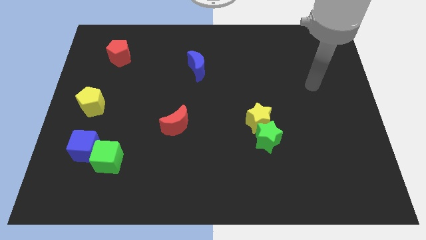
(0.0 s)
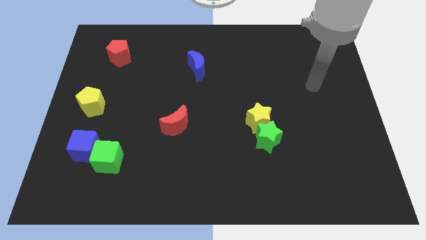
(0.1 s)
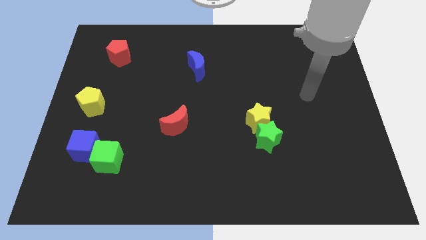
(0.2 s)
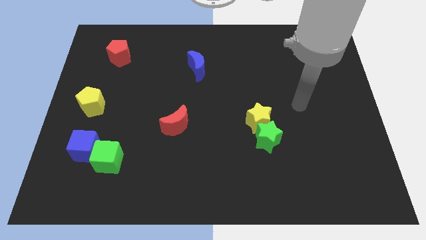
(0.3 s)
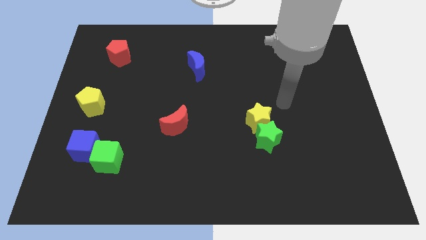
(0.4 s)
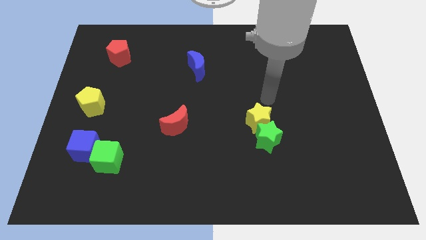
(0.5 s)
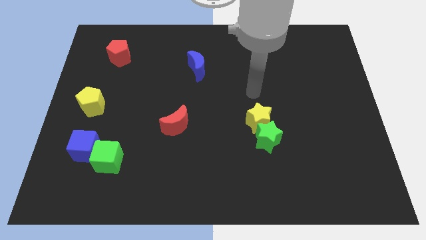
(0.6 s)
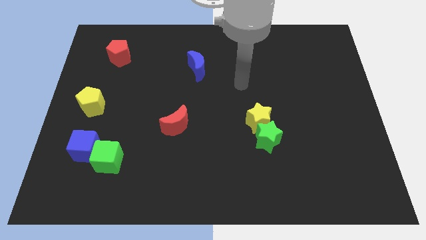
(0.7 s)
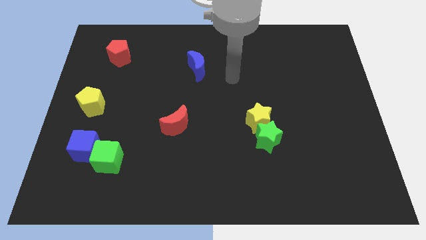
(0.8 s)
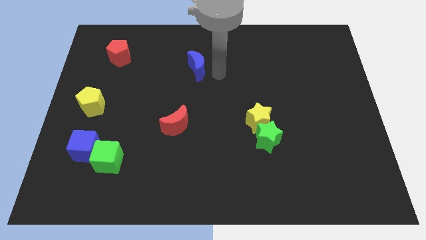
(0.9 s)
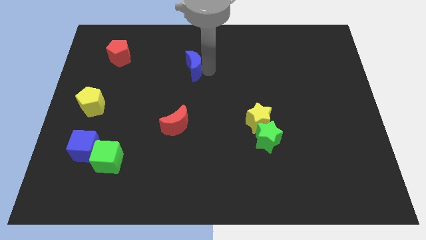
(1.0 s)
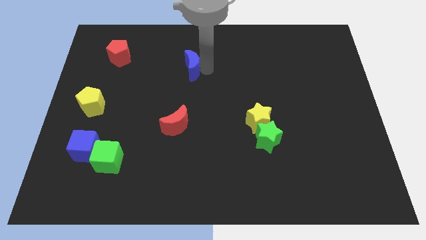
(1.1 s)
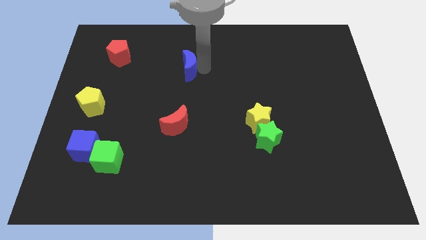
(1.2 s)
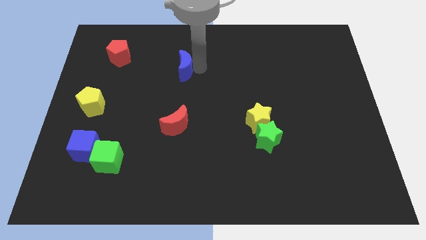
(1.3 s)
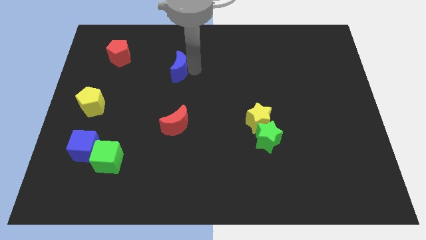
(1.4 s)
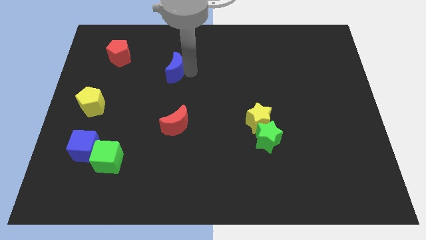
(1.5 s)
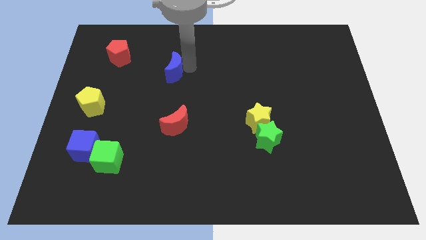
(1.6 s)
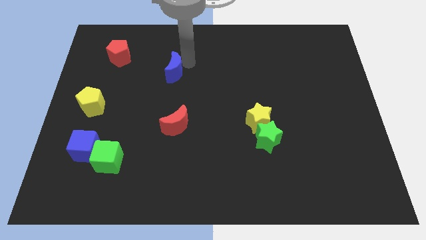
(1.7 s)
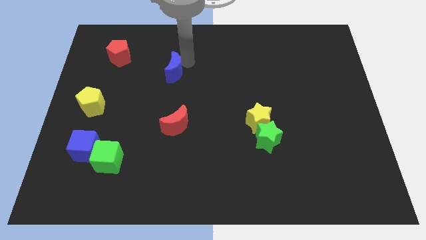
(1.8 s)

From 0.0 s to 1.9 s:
slide blue moon vertically above the red moon

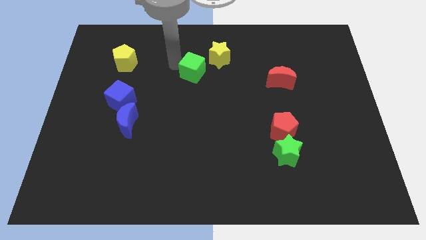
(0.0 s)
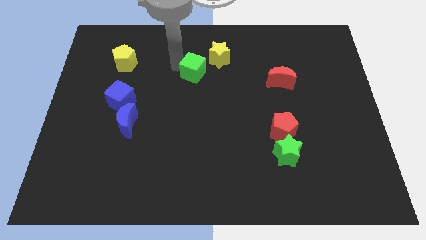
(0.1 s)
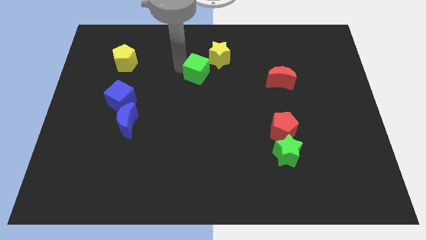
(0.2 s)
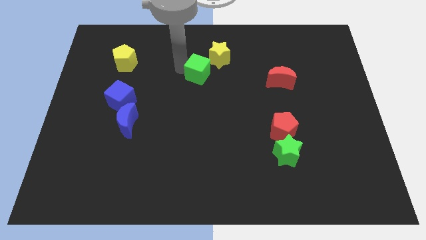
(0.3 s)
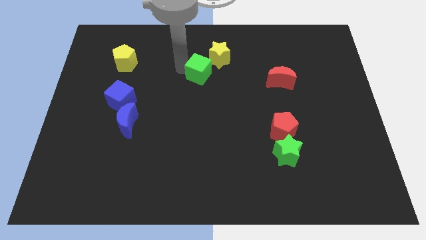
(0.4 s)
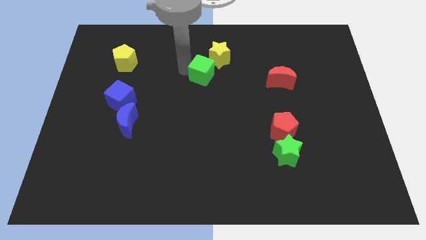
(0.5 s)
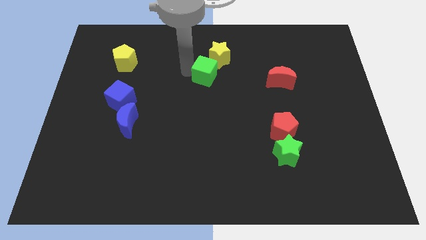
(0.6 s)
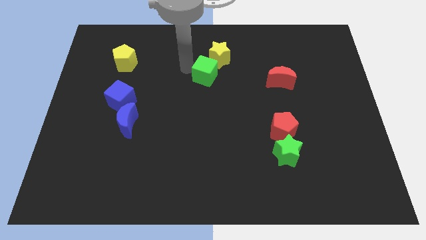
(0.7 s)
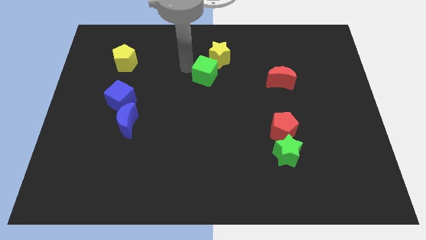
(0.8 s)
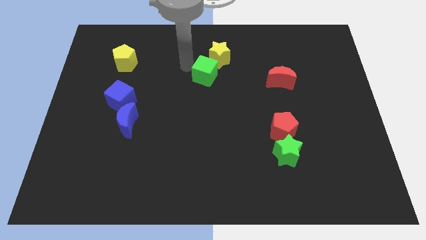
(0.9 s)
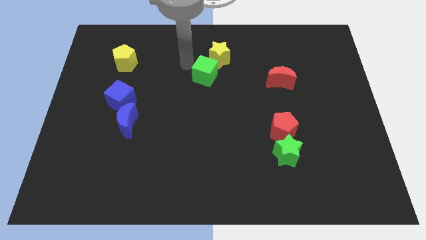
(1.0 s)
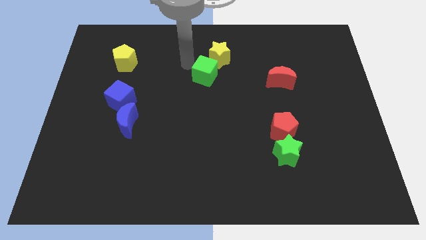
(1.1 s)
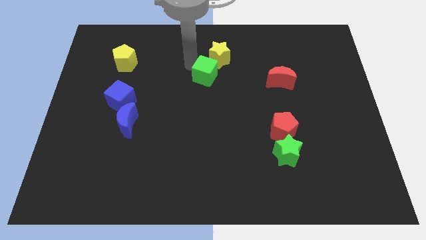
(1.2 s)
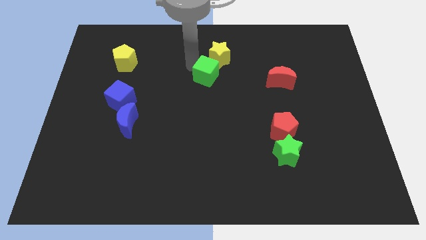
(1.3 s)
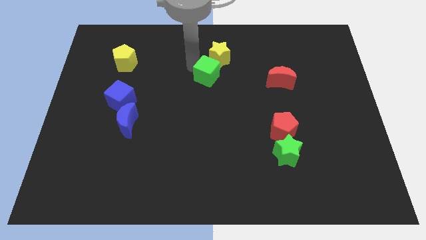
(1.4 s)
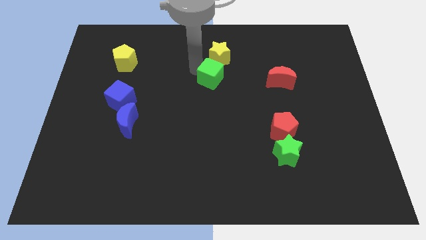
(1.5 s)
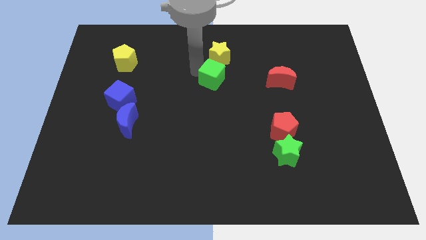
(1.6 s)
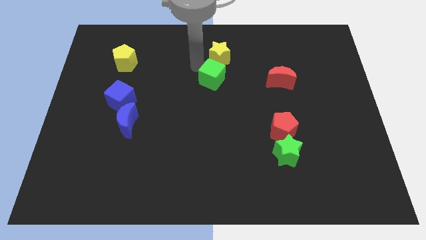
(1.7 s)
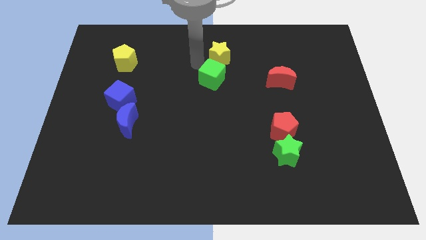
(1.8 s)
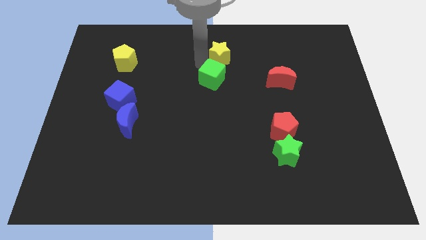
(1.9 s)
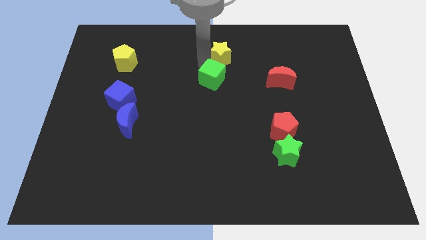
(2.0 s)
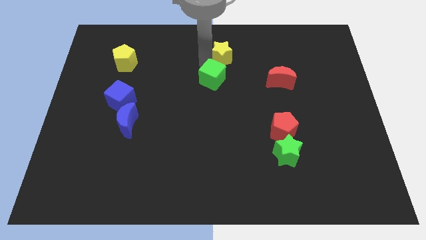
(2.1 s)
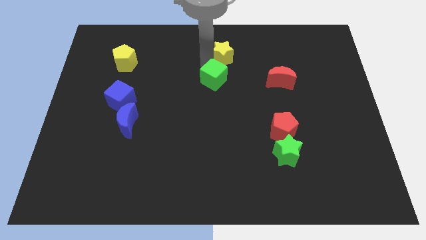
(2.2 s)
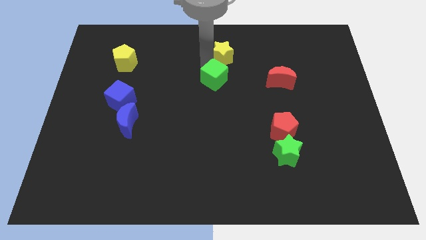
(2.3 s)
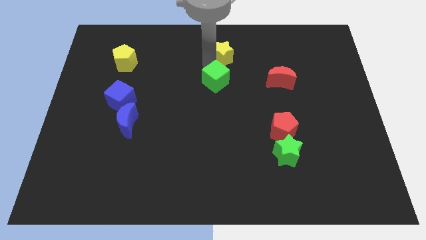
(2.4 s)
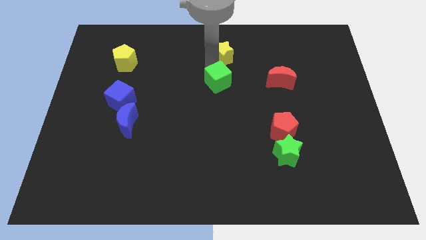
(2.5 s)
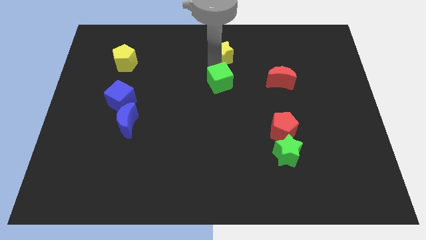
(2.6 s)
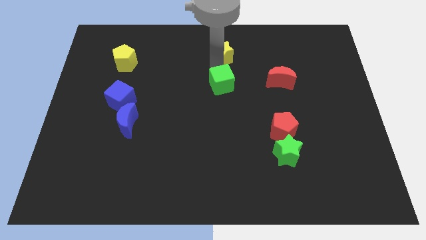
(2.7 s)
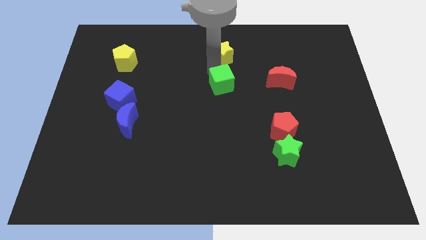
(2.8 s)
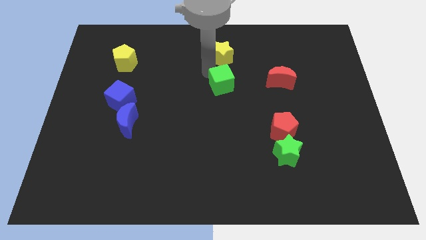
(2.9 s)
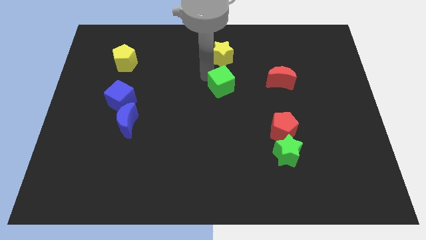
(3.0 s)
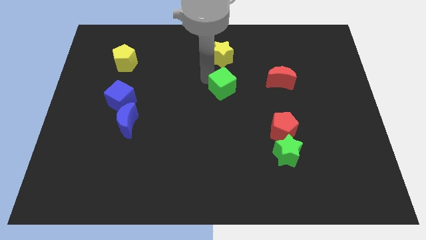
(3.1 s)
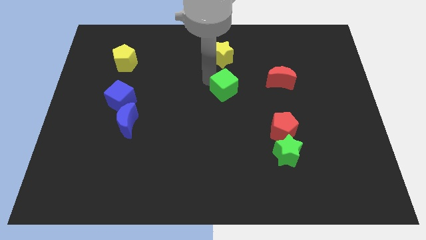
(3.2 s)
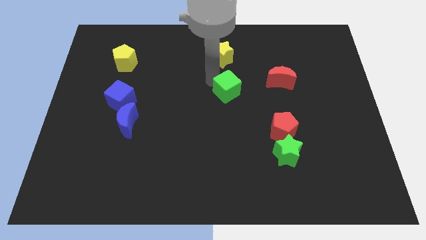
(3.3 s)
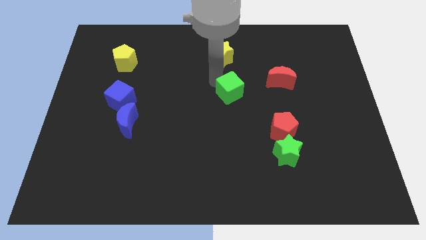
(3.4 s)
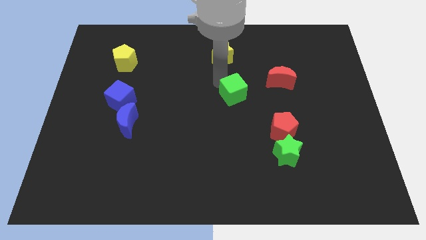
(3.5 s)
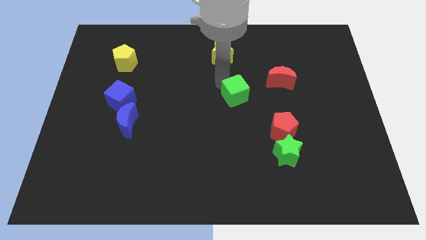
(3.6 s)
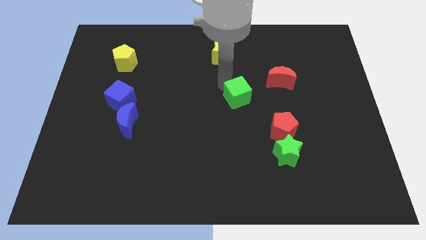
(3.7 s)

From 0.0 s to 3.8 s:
place the green cube towards the bottom of the yellow star

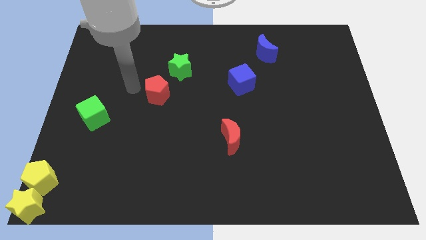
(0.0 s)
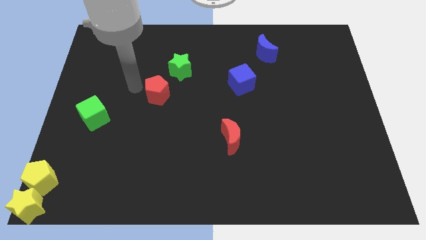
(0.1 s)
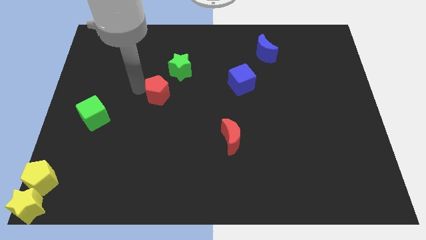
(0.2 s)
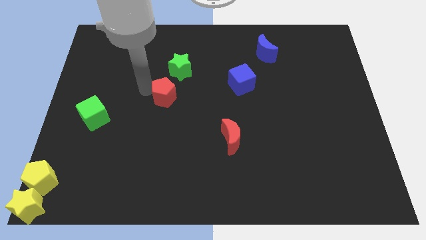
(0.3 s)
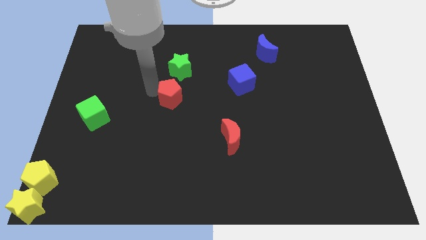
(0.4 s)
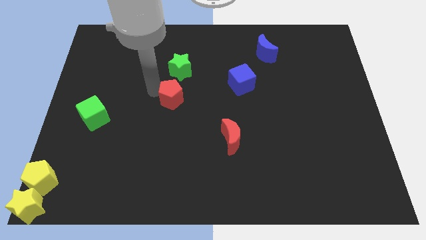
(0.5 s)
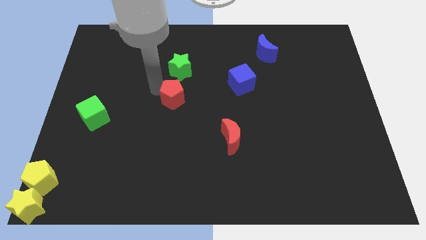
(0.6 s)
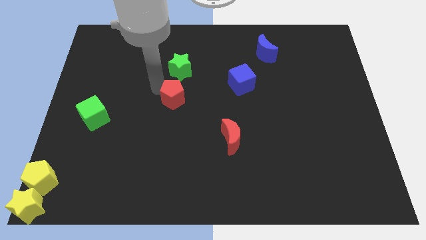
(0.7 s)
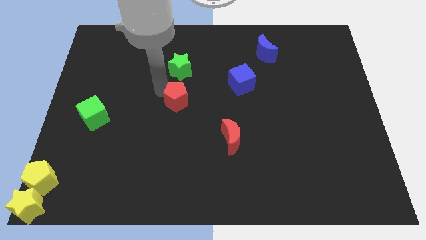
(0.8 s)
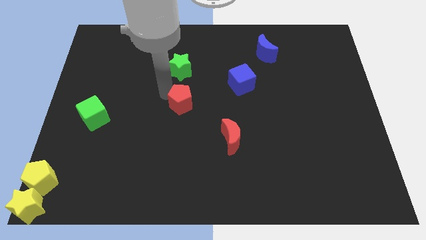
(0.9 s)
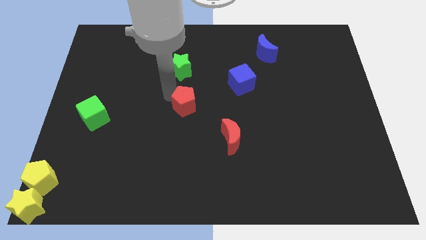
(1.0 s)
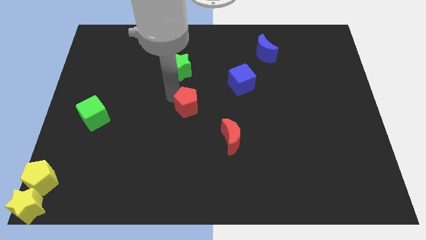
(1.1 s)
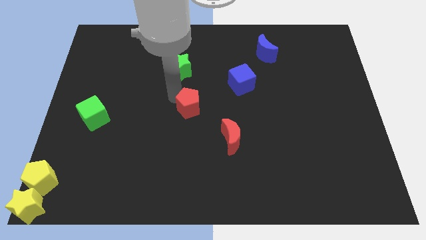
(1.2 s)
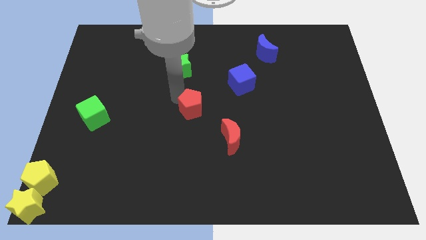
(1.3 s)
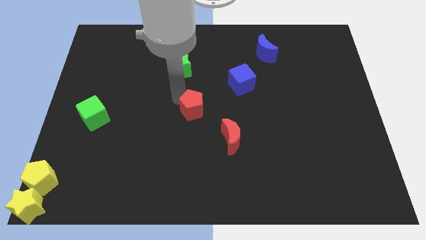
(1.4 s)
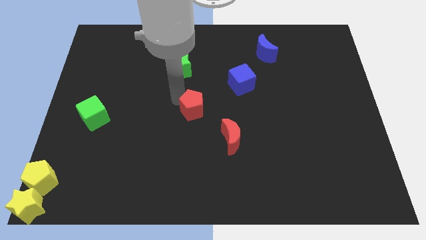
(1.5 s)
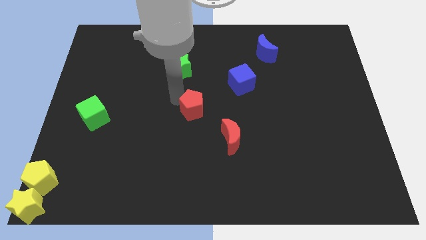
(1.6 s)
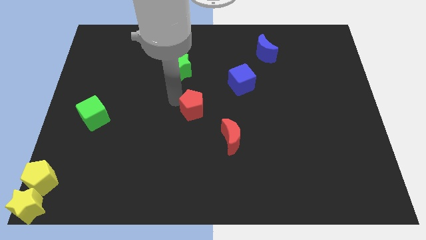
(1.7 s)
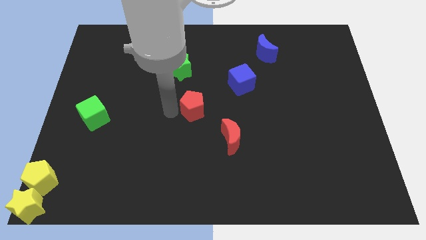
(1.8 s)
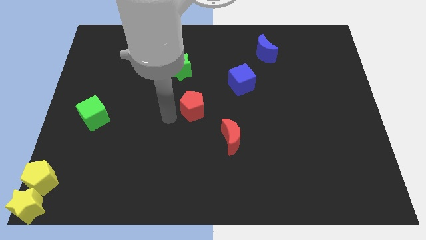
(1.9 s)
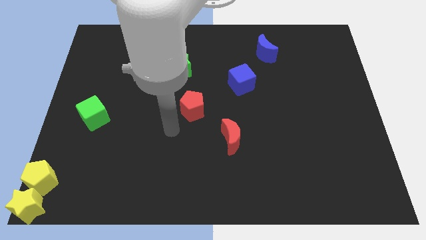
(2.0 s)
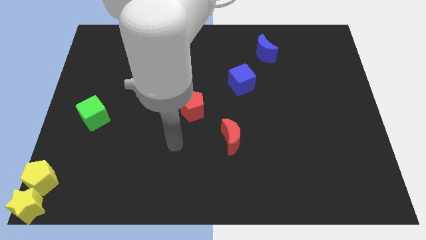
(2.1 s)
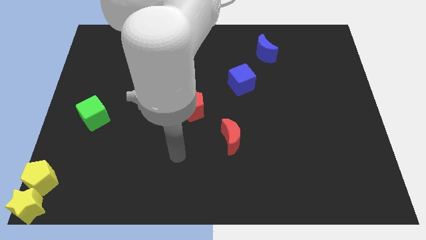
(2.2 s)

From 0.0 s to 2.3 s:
push the red pentagon towards the center of the board

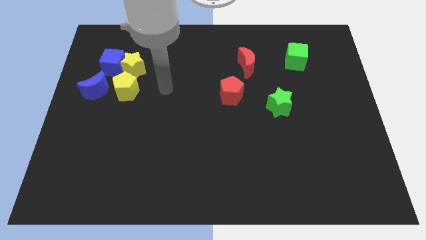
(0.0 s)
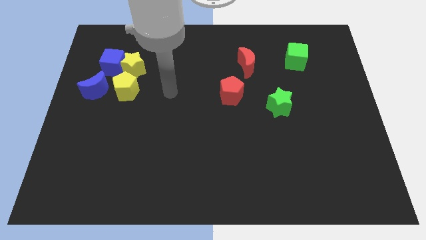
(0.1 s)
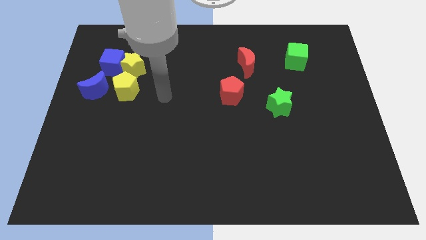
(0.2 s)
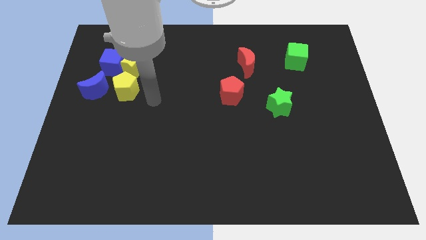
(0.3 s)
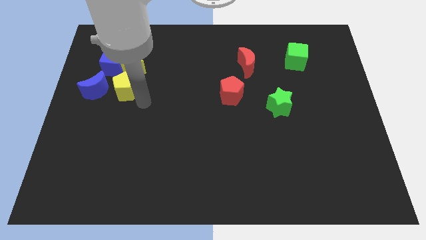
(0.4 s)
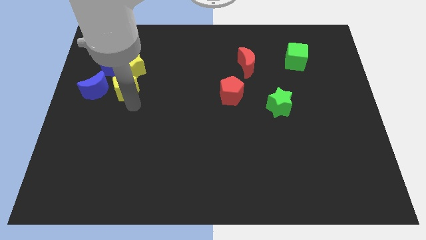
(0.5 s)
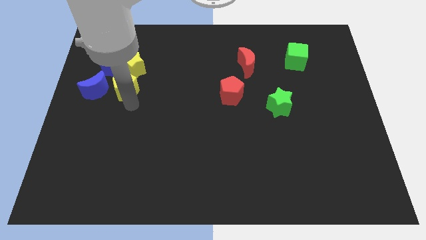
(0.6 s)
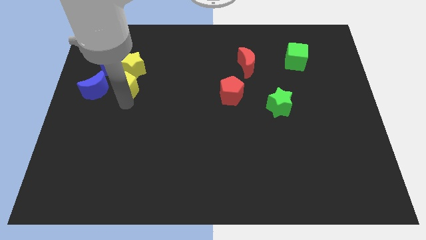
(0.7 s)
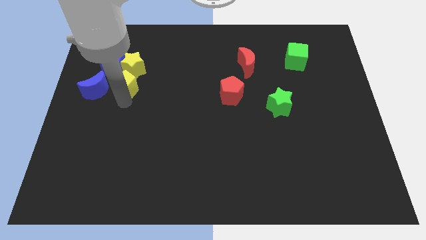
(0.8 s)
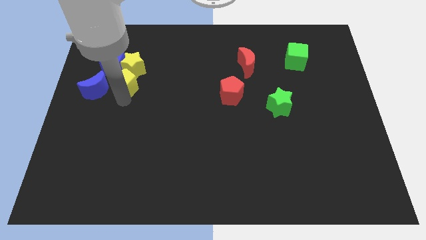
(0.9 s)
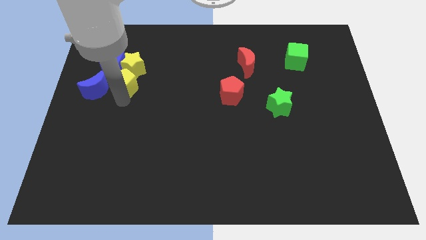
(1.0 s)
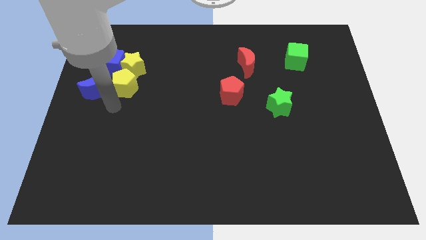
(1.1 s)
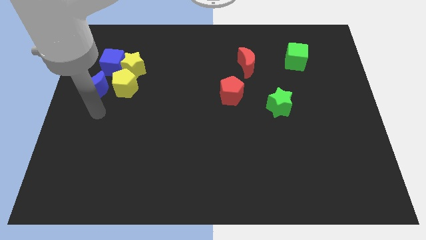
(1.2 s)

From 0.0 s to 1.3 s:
adjust the yellow pentagon at the bottom of yellow star
